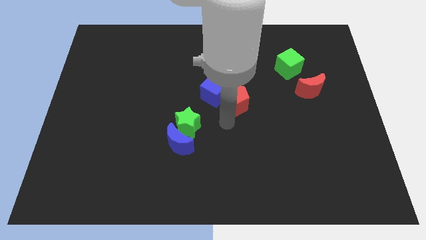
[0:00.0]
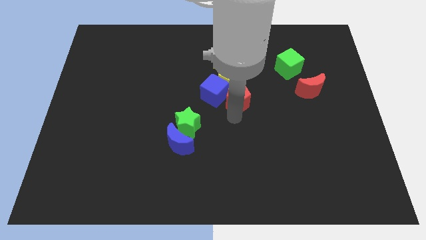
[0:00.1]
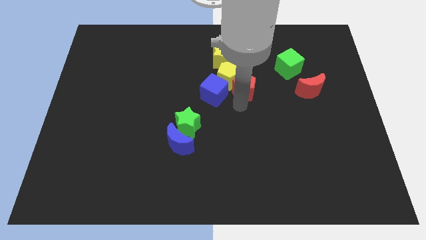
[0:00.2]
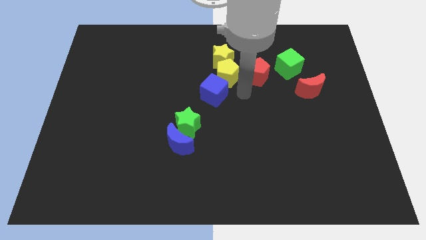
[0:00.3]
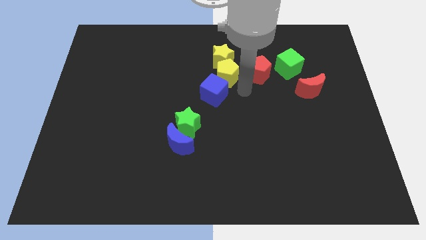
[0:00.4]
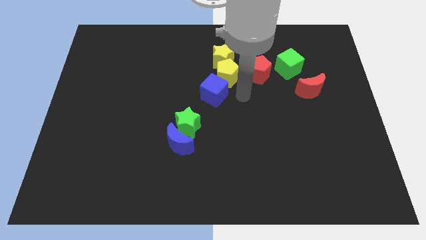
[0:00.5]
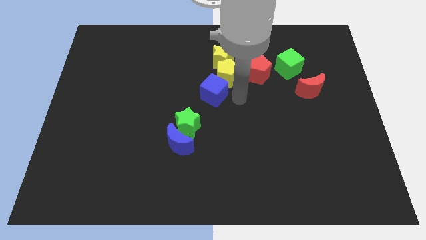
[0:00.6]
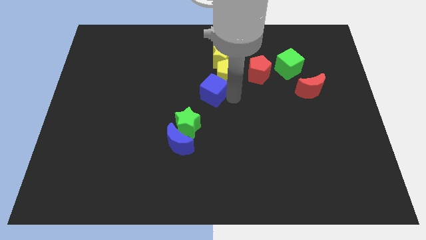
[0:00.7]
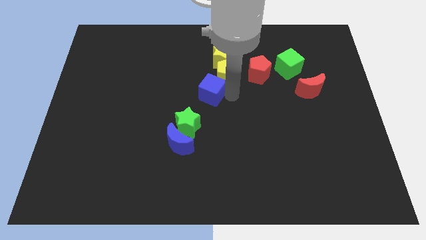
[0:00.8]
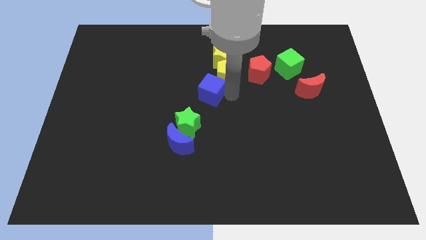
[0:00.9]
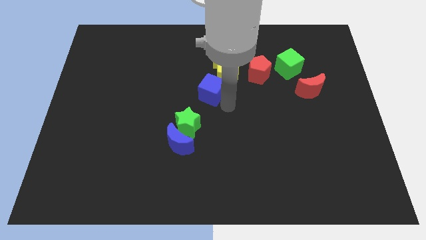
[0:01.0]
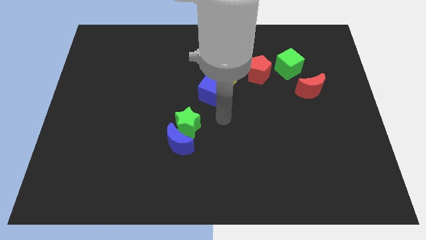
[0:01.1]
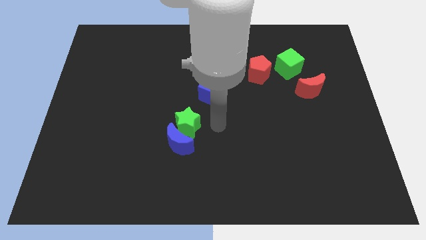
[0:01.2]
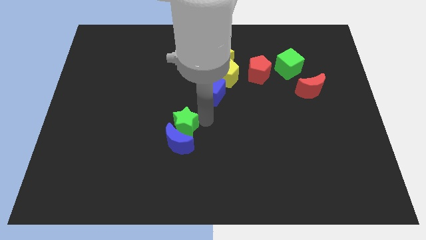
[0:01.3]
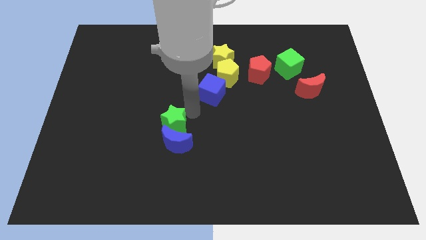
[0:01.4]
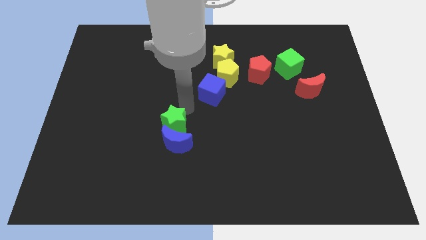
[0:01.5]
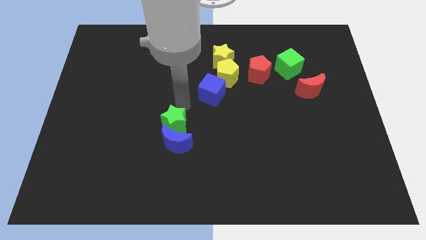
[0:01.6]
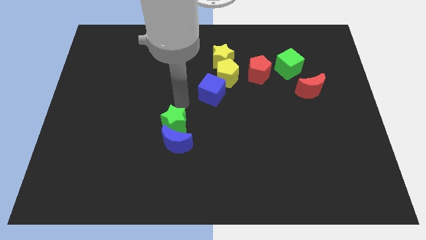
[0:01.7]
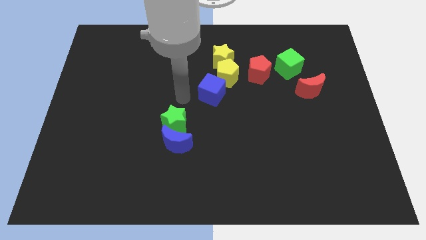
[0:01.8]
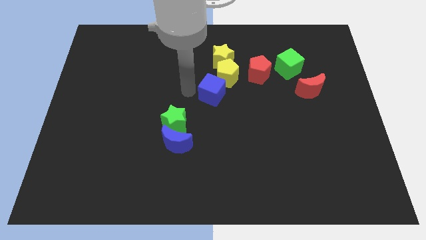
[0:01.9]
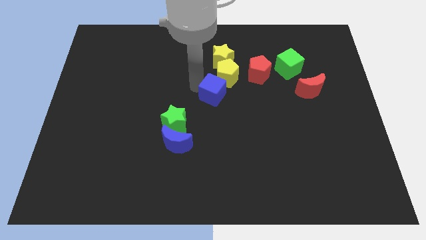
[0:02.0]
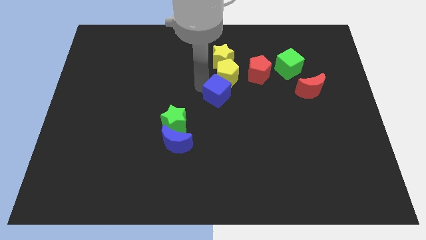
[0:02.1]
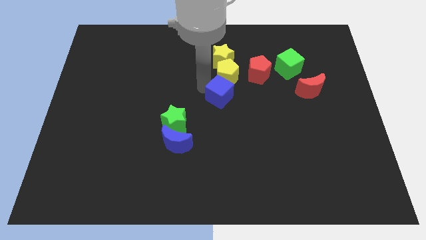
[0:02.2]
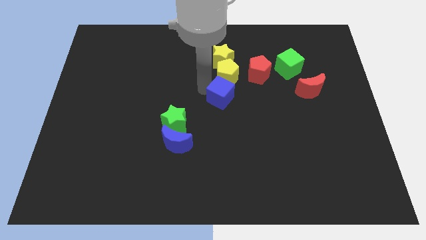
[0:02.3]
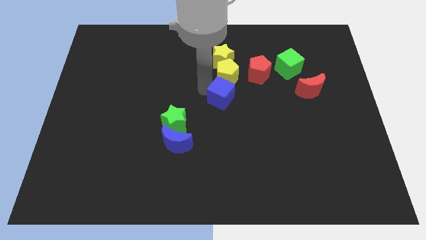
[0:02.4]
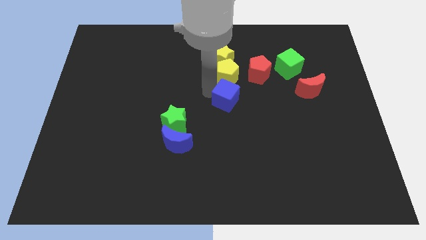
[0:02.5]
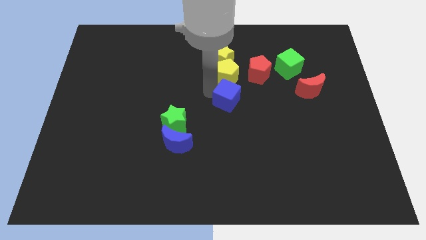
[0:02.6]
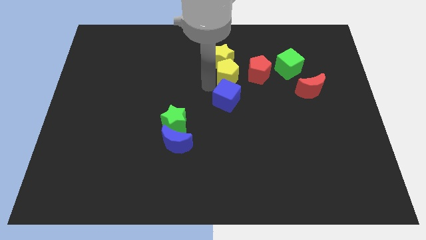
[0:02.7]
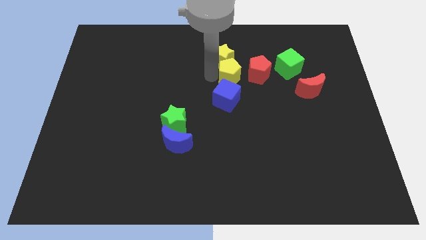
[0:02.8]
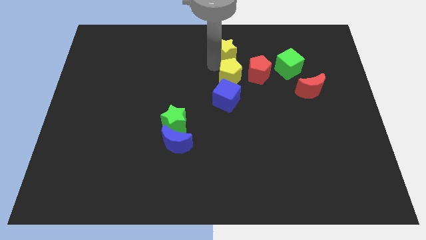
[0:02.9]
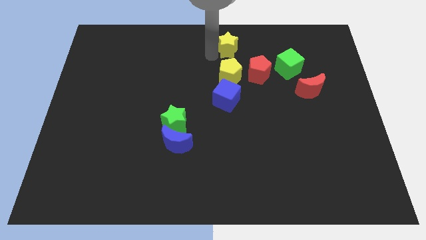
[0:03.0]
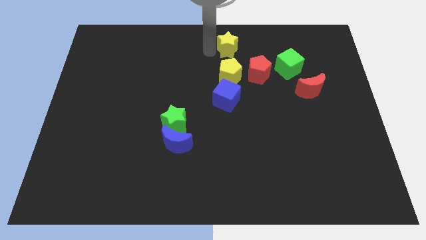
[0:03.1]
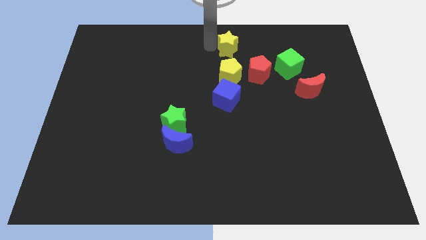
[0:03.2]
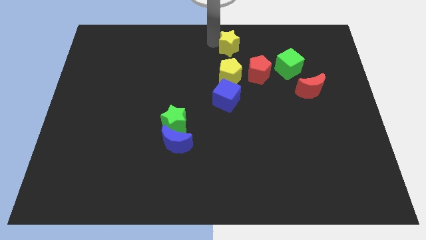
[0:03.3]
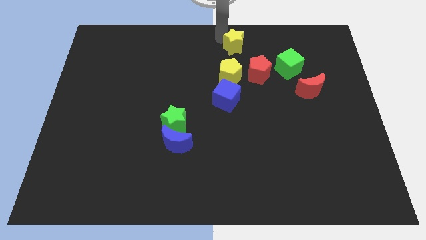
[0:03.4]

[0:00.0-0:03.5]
move the red pentagon towards the green cube

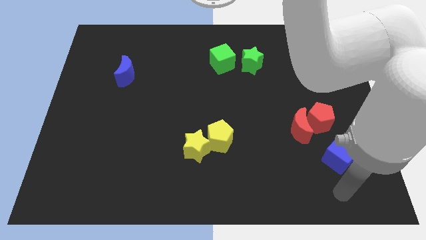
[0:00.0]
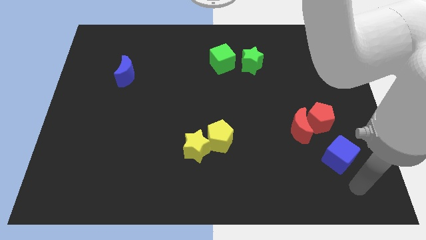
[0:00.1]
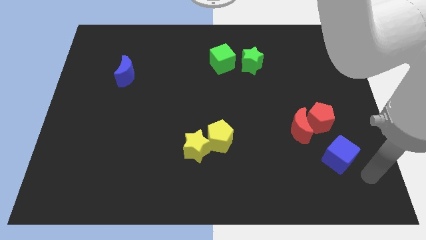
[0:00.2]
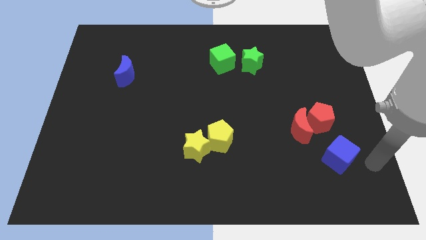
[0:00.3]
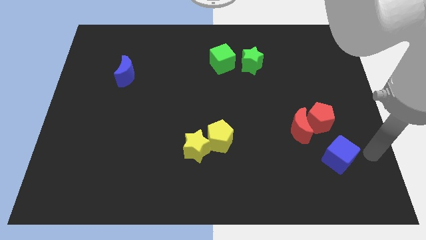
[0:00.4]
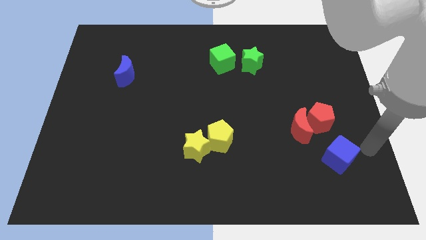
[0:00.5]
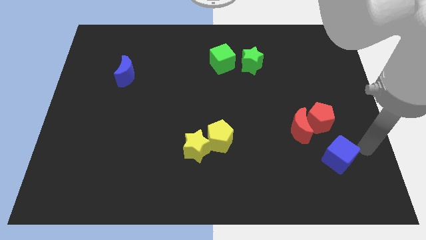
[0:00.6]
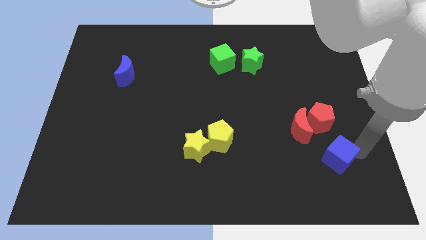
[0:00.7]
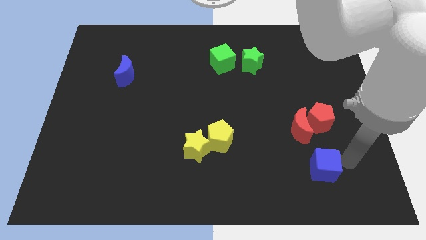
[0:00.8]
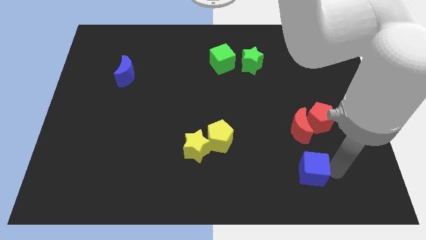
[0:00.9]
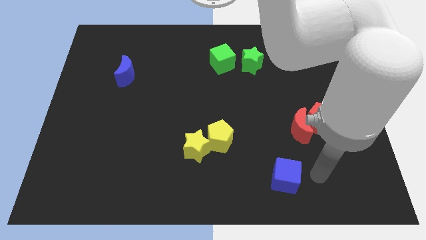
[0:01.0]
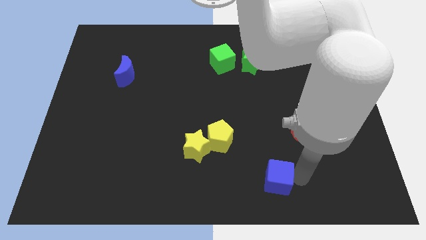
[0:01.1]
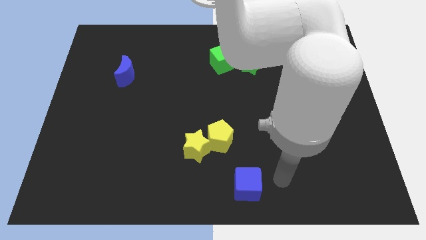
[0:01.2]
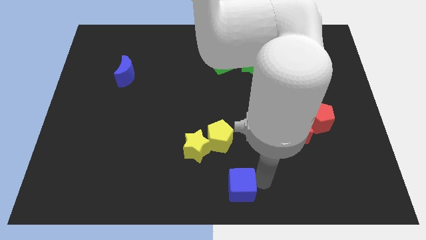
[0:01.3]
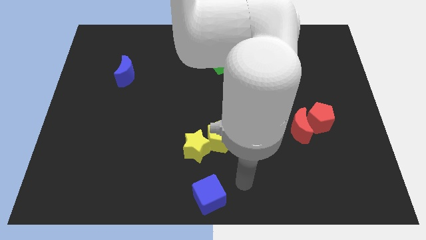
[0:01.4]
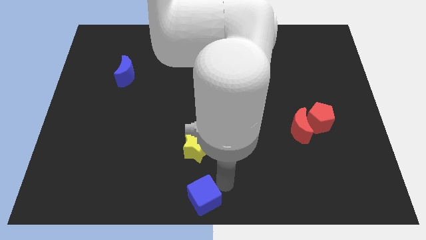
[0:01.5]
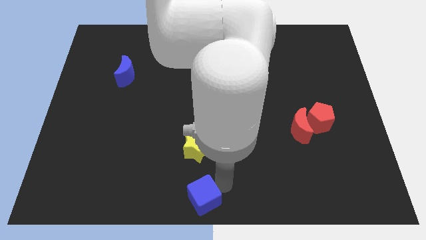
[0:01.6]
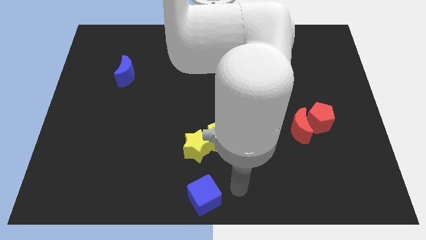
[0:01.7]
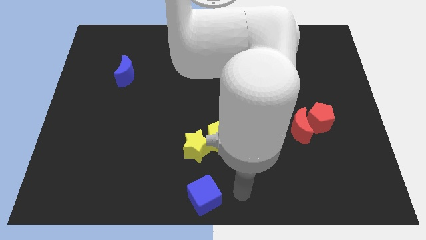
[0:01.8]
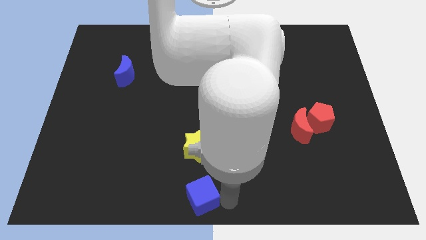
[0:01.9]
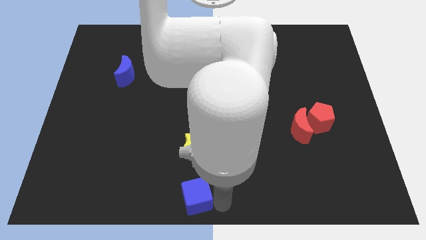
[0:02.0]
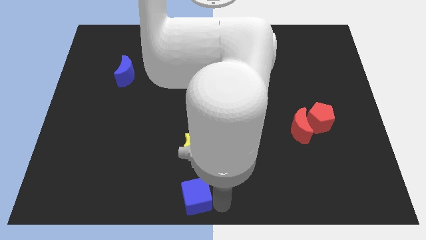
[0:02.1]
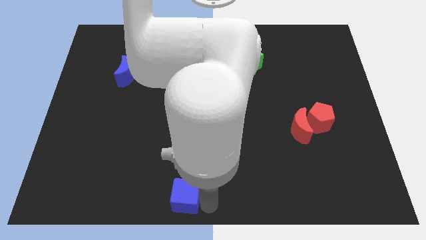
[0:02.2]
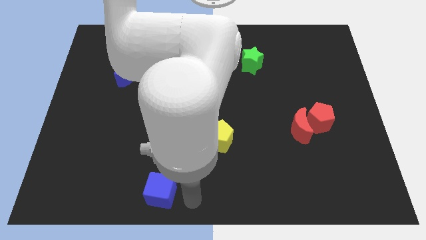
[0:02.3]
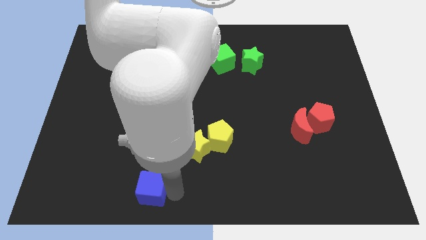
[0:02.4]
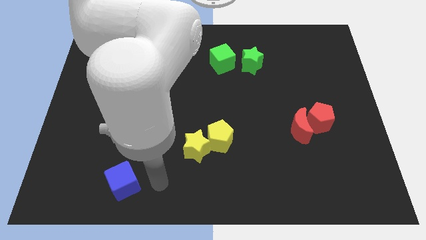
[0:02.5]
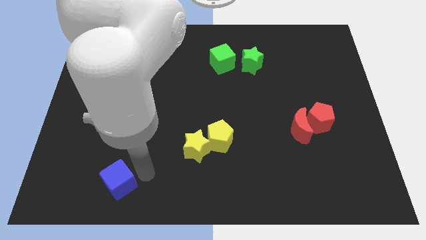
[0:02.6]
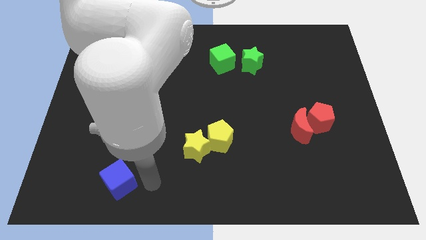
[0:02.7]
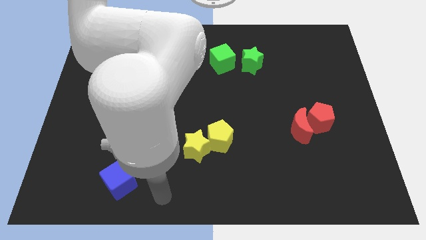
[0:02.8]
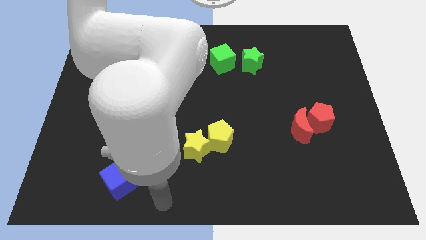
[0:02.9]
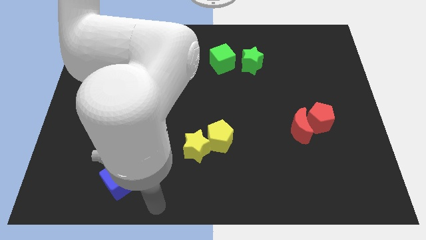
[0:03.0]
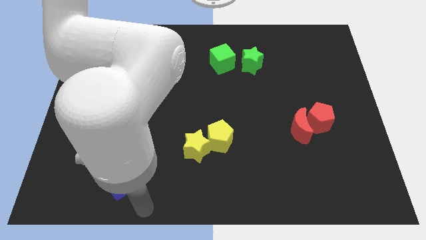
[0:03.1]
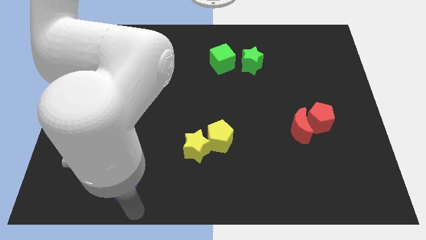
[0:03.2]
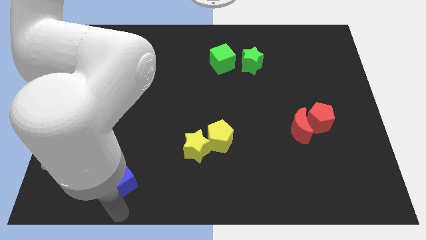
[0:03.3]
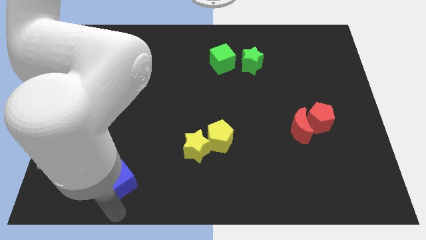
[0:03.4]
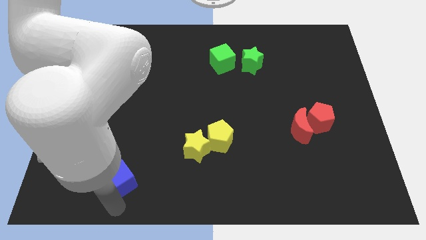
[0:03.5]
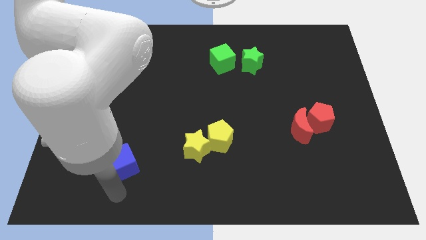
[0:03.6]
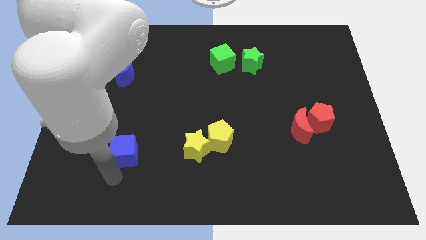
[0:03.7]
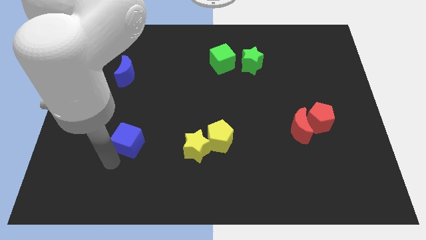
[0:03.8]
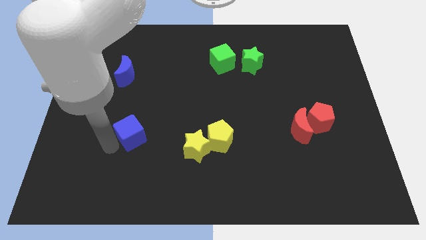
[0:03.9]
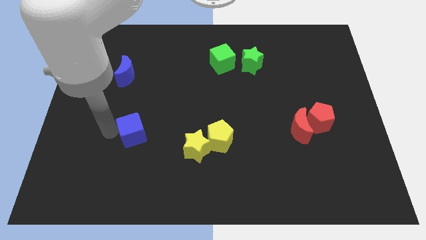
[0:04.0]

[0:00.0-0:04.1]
push blue cube up below the blue moon

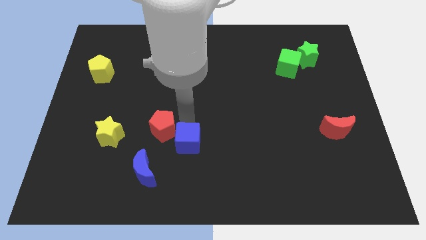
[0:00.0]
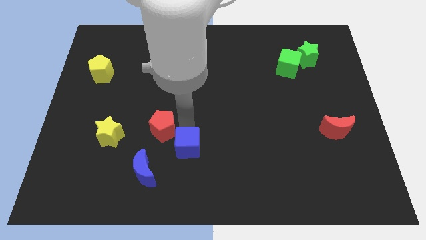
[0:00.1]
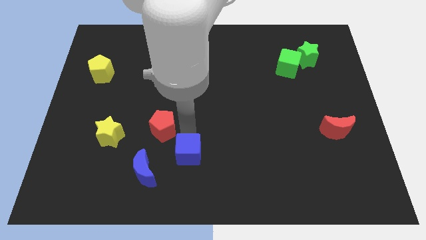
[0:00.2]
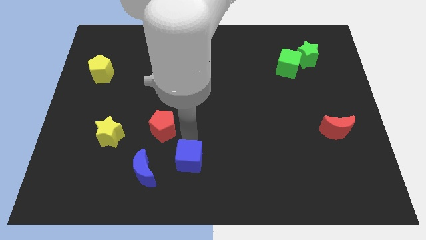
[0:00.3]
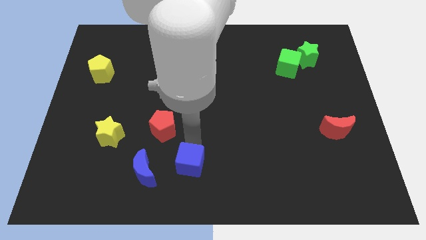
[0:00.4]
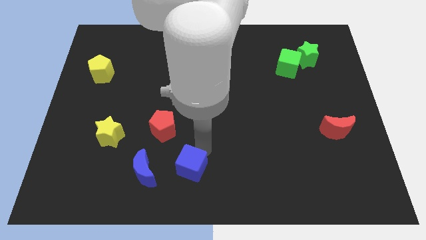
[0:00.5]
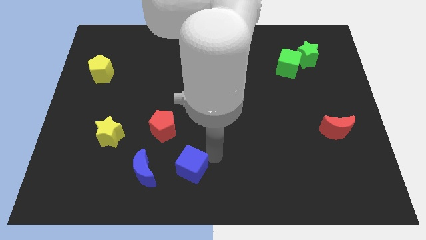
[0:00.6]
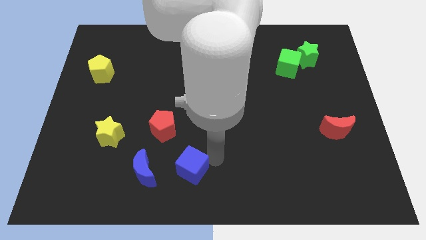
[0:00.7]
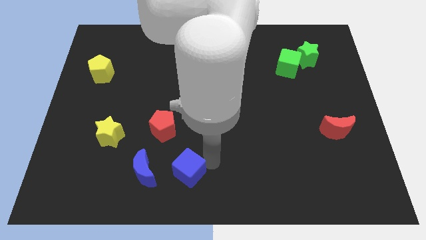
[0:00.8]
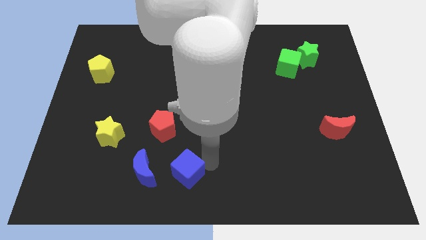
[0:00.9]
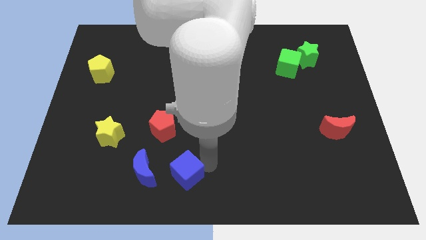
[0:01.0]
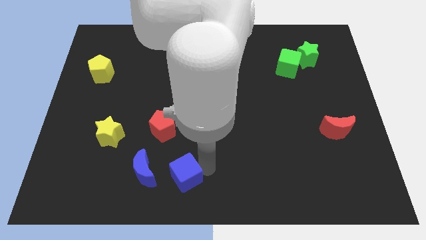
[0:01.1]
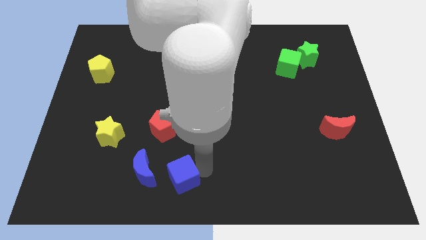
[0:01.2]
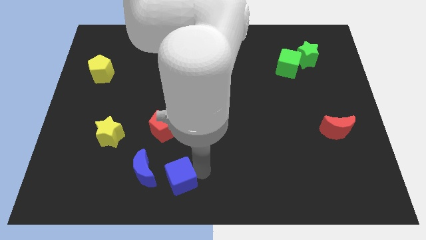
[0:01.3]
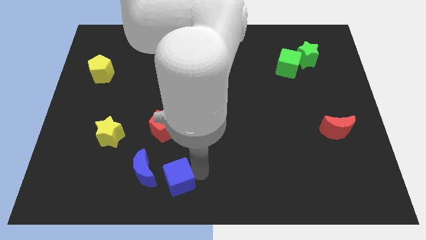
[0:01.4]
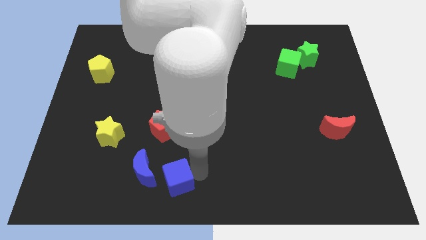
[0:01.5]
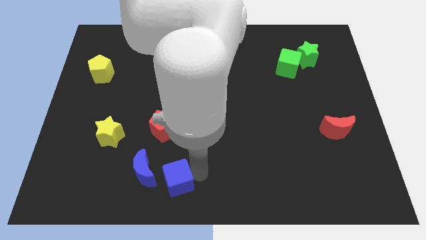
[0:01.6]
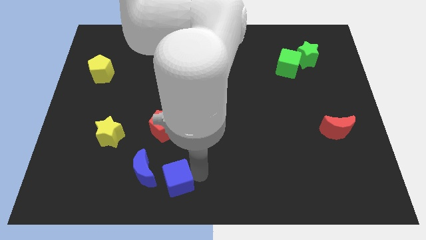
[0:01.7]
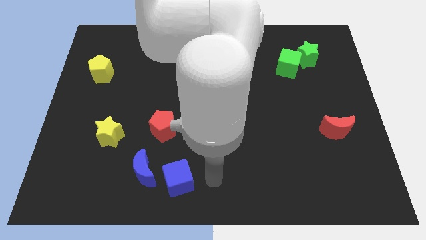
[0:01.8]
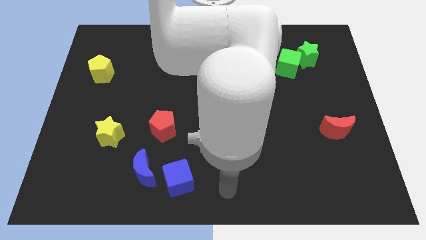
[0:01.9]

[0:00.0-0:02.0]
move the blue cube diagonal to green cube
